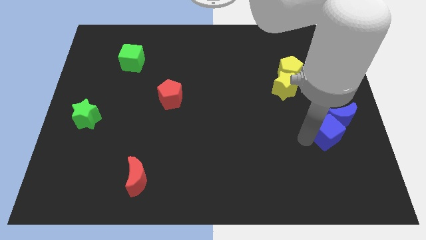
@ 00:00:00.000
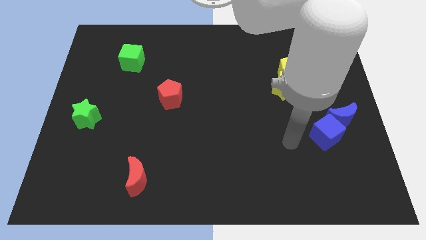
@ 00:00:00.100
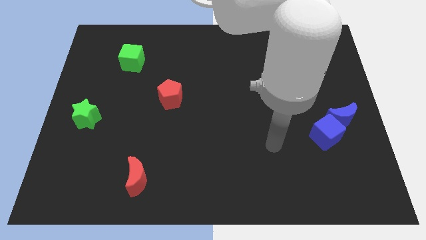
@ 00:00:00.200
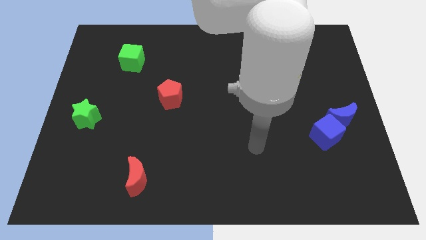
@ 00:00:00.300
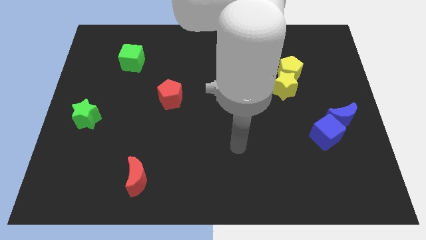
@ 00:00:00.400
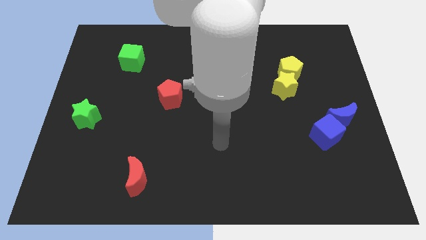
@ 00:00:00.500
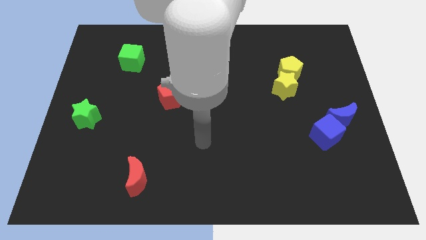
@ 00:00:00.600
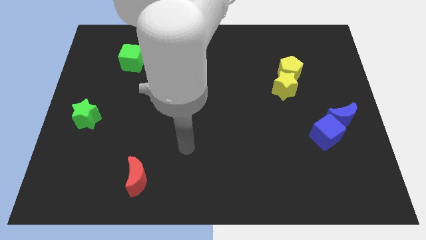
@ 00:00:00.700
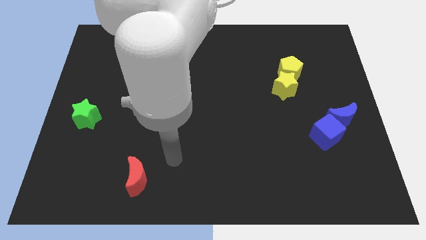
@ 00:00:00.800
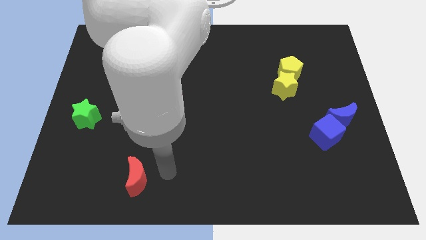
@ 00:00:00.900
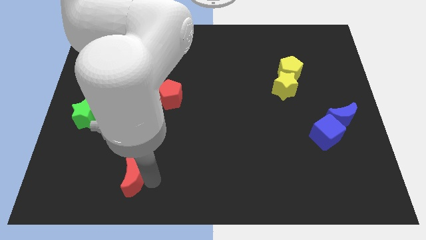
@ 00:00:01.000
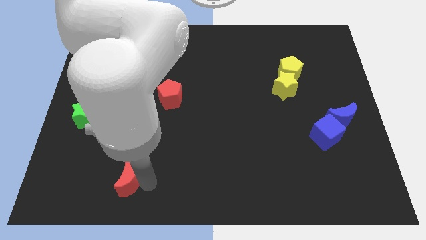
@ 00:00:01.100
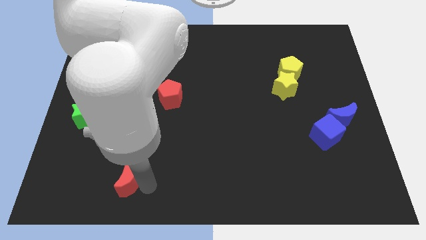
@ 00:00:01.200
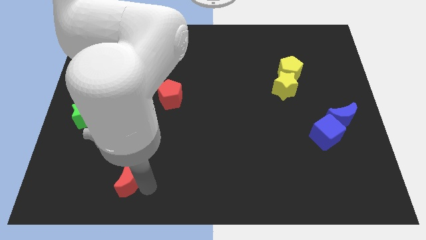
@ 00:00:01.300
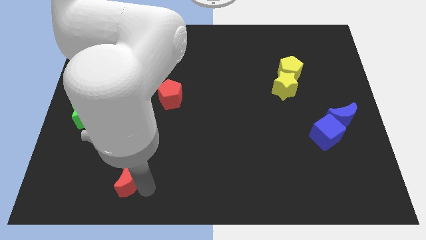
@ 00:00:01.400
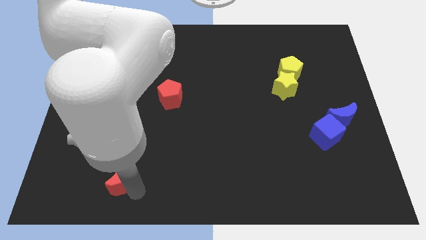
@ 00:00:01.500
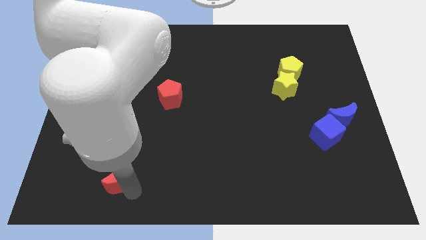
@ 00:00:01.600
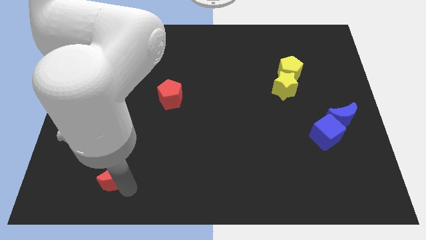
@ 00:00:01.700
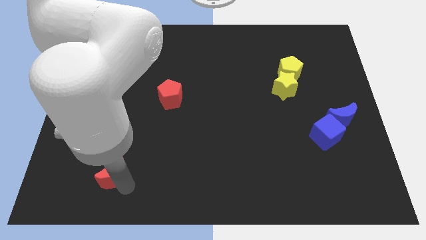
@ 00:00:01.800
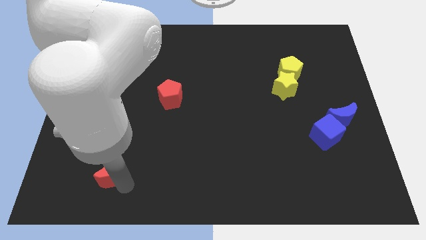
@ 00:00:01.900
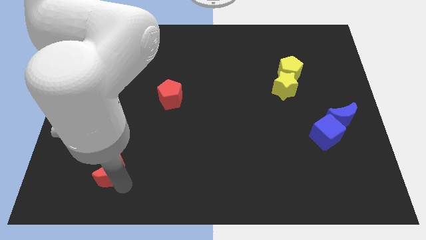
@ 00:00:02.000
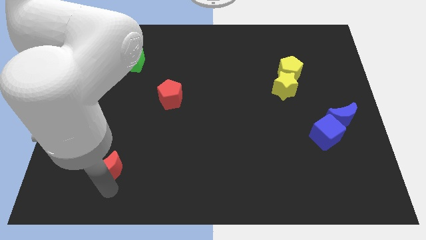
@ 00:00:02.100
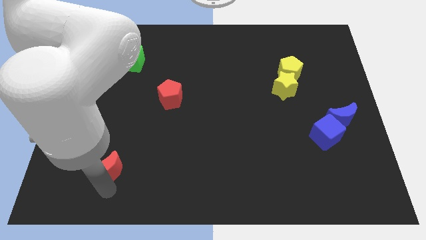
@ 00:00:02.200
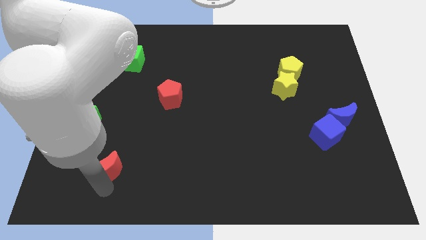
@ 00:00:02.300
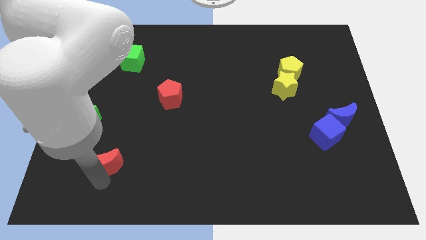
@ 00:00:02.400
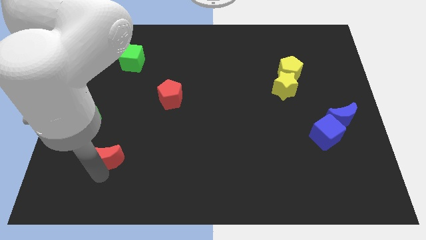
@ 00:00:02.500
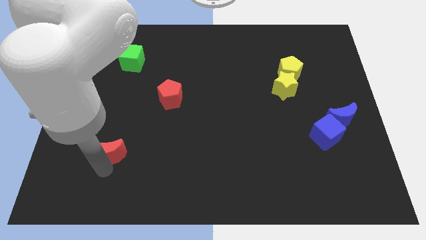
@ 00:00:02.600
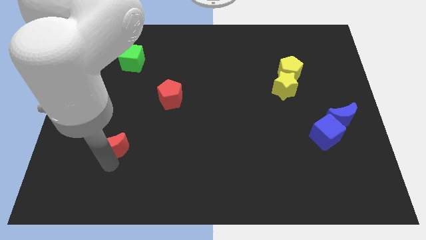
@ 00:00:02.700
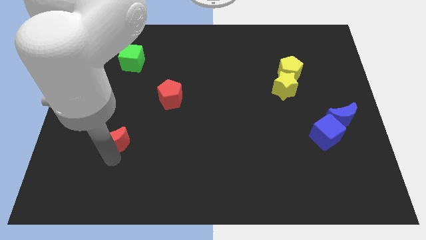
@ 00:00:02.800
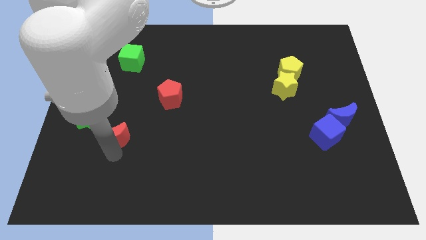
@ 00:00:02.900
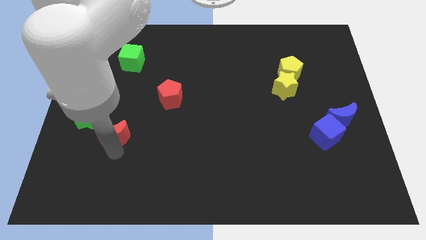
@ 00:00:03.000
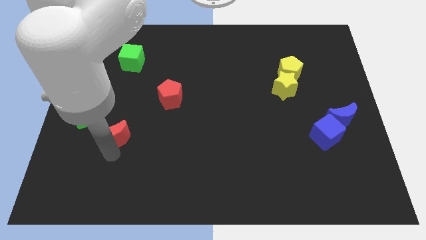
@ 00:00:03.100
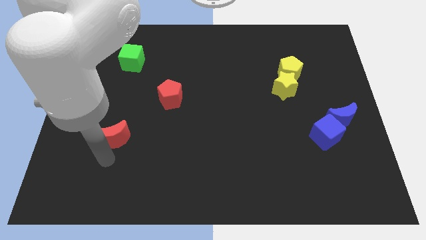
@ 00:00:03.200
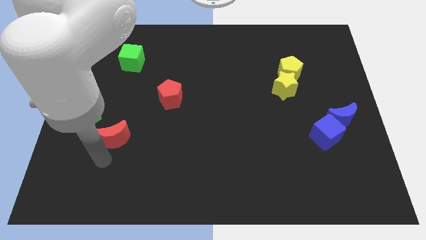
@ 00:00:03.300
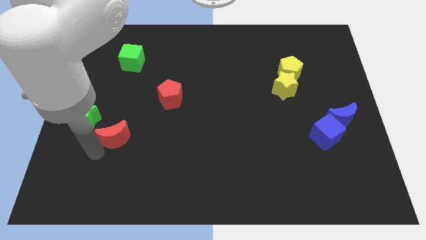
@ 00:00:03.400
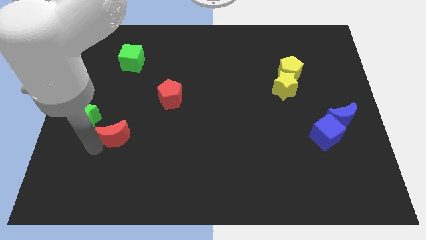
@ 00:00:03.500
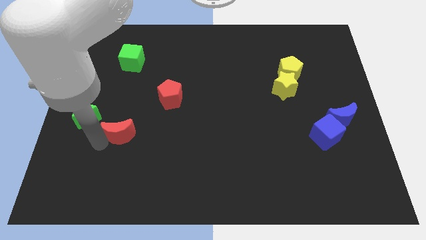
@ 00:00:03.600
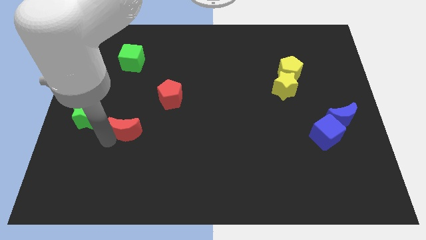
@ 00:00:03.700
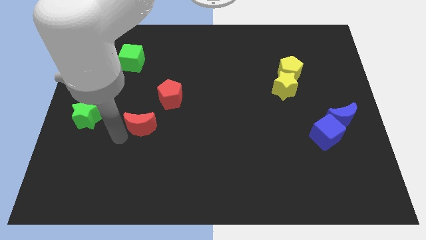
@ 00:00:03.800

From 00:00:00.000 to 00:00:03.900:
push the red crescent to the right of the green star

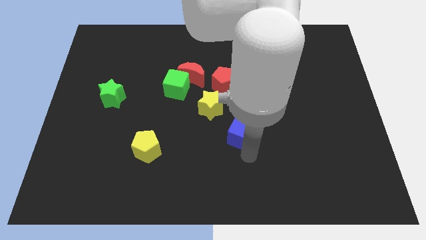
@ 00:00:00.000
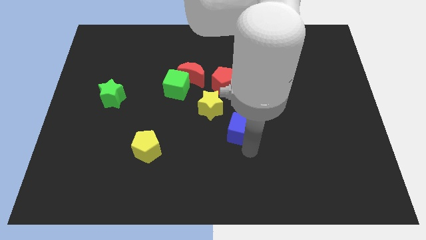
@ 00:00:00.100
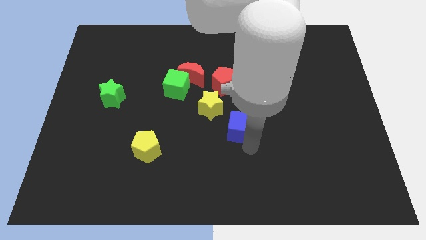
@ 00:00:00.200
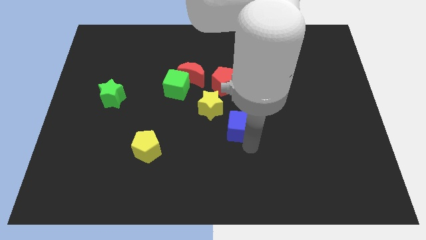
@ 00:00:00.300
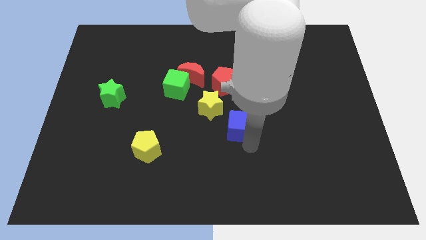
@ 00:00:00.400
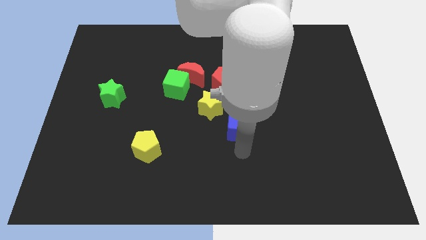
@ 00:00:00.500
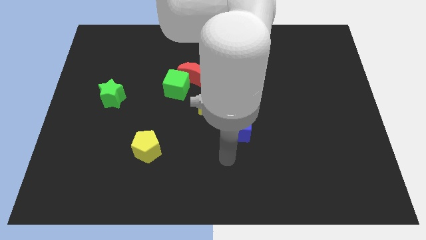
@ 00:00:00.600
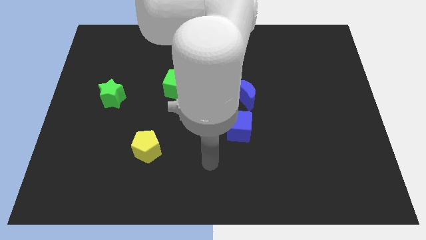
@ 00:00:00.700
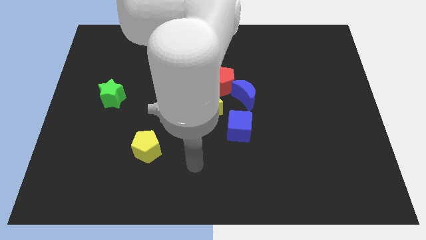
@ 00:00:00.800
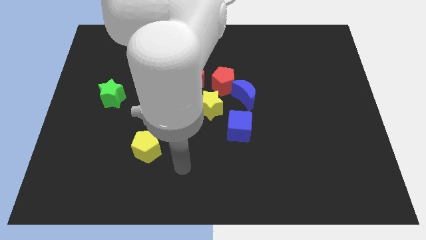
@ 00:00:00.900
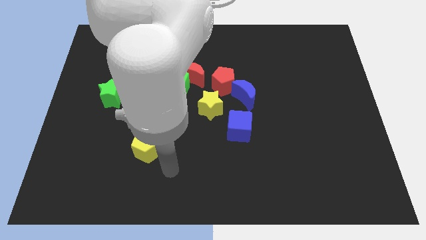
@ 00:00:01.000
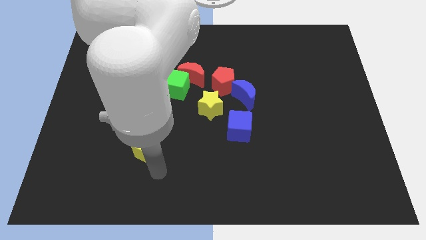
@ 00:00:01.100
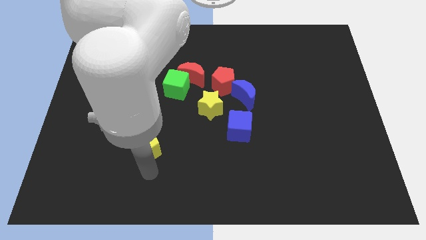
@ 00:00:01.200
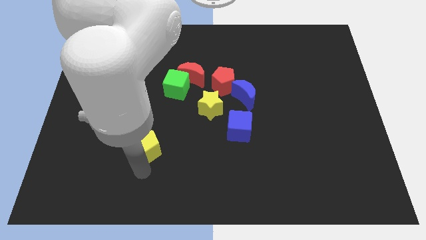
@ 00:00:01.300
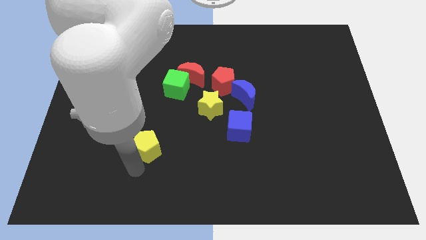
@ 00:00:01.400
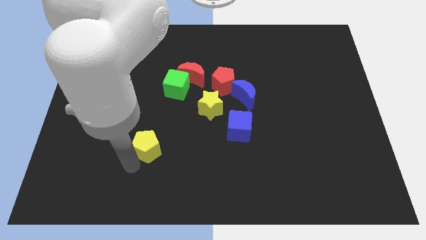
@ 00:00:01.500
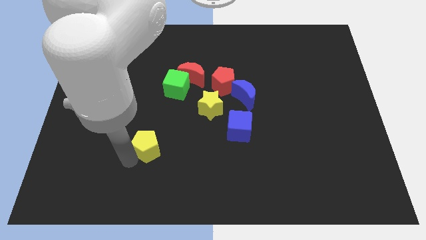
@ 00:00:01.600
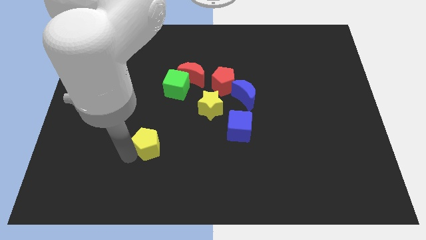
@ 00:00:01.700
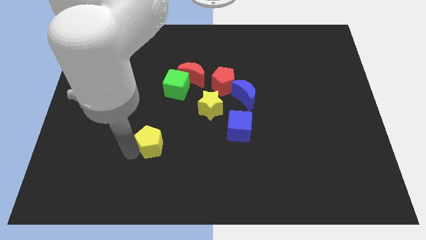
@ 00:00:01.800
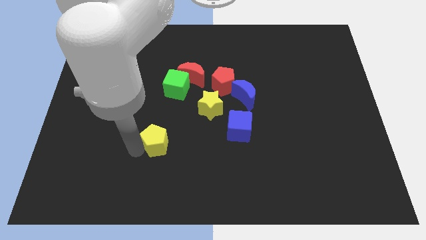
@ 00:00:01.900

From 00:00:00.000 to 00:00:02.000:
place the blue cube to the bottom of the blue moon

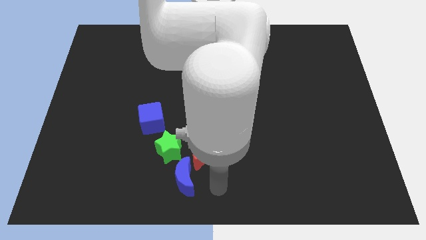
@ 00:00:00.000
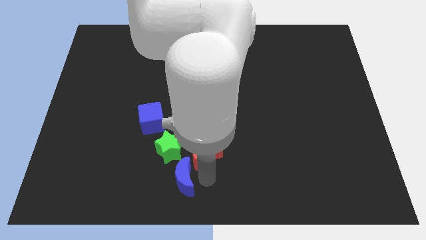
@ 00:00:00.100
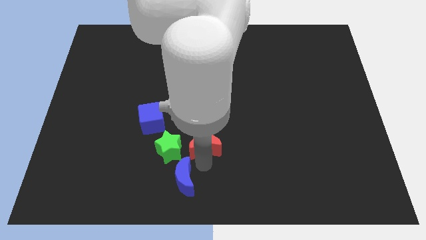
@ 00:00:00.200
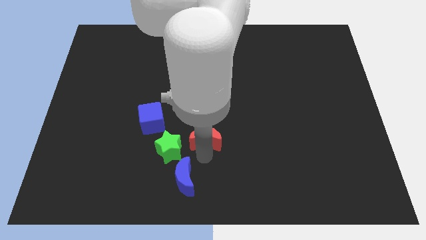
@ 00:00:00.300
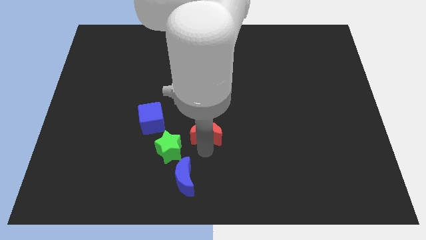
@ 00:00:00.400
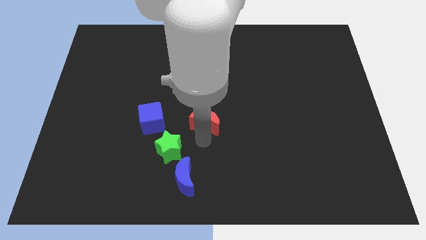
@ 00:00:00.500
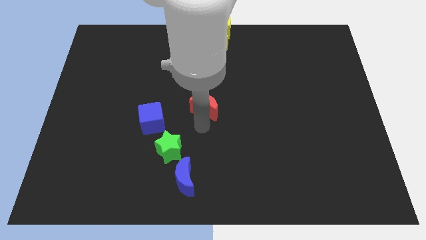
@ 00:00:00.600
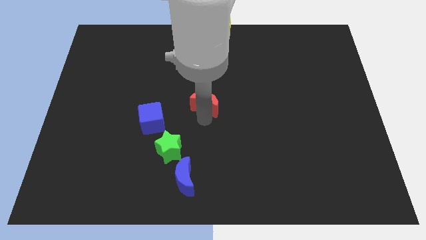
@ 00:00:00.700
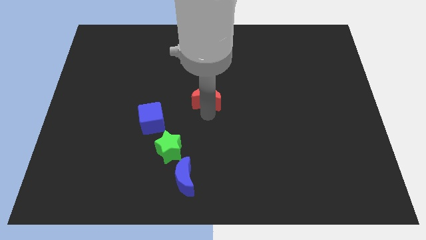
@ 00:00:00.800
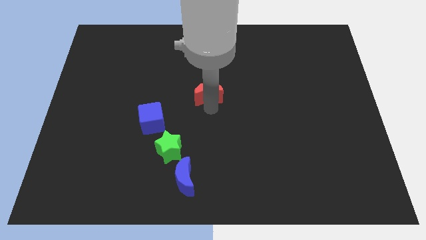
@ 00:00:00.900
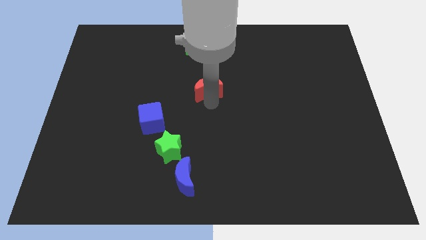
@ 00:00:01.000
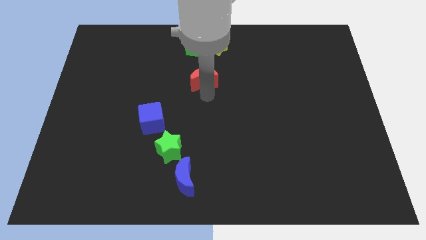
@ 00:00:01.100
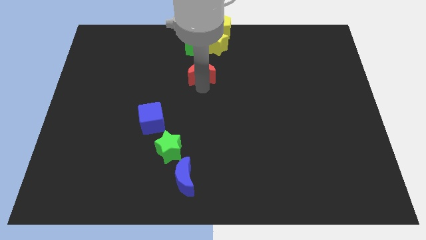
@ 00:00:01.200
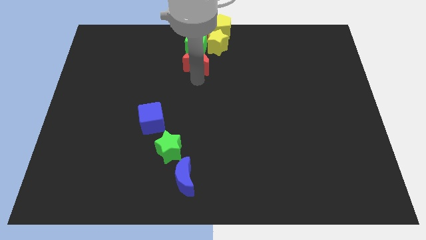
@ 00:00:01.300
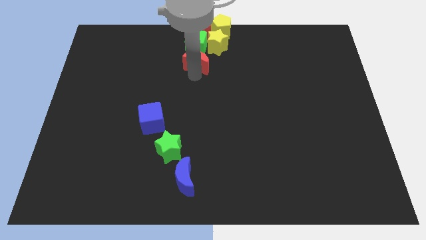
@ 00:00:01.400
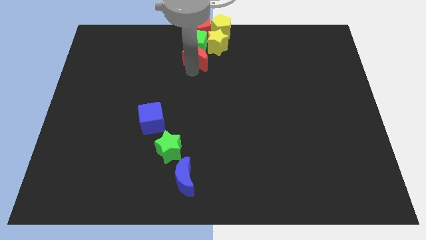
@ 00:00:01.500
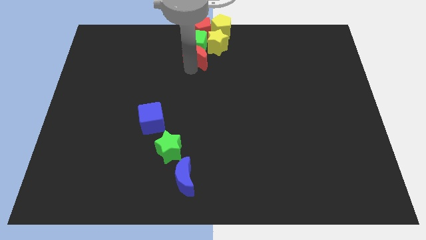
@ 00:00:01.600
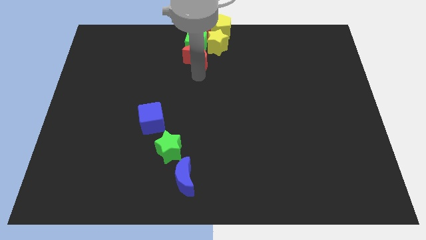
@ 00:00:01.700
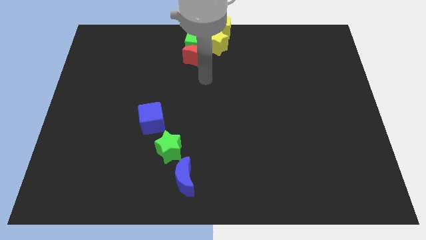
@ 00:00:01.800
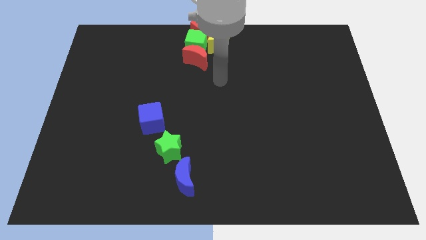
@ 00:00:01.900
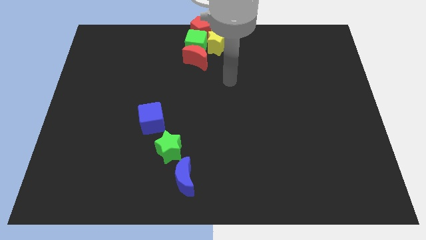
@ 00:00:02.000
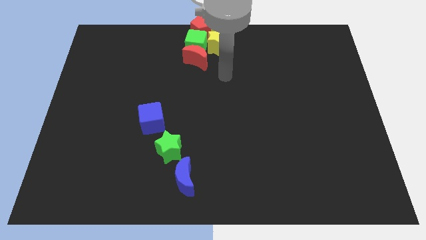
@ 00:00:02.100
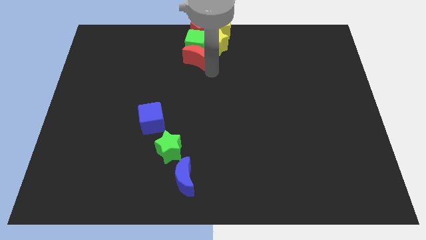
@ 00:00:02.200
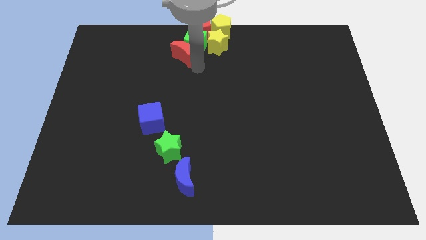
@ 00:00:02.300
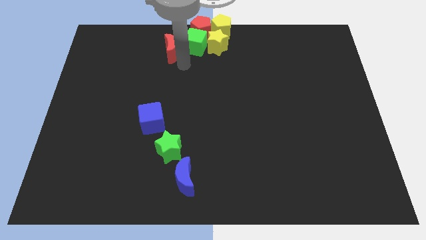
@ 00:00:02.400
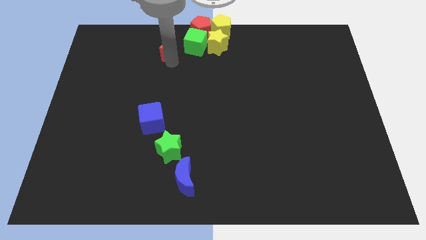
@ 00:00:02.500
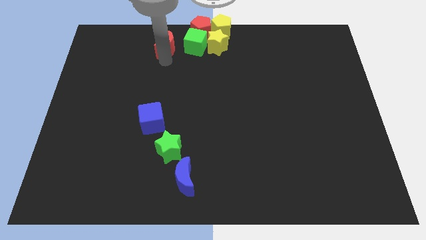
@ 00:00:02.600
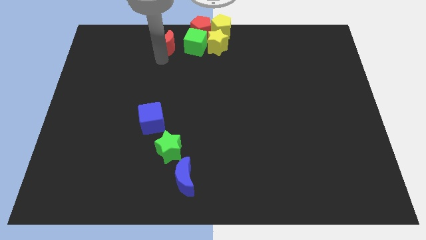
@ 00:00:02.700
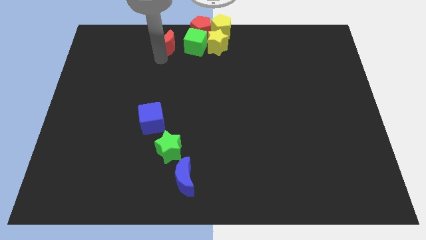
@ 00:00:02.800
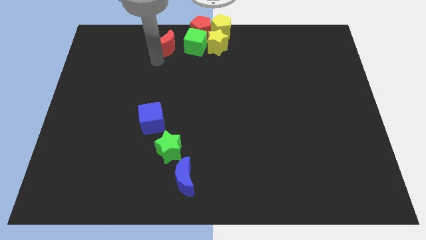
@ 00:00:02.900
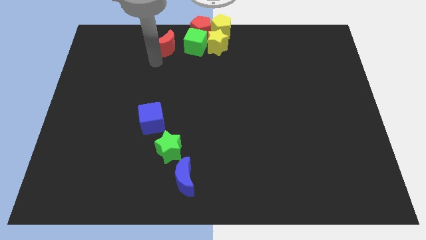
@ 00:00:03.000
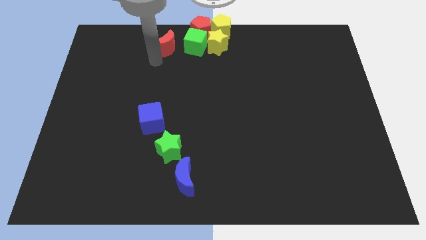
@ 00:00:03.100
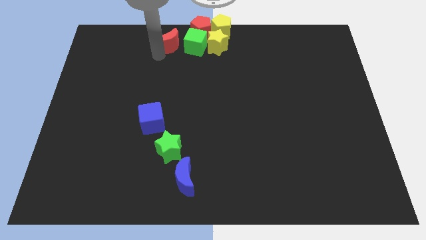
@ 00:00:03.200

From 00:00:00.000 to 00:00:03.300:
separate red moon from blue moon
